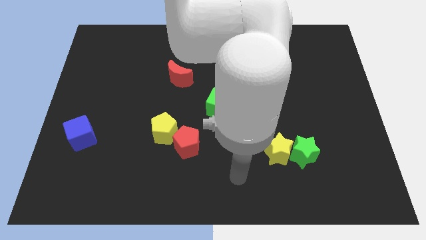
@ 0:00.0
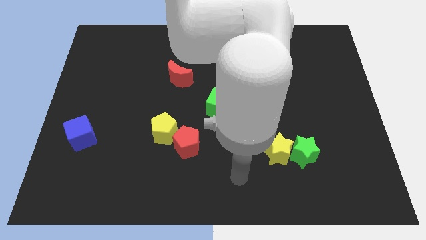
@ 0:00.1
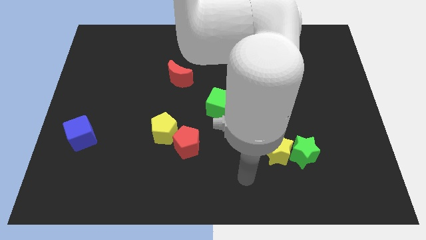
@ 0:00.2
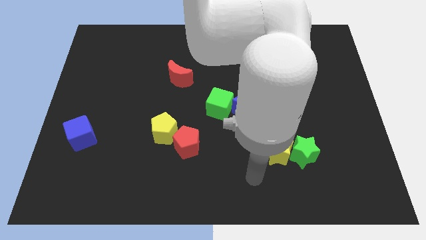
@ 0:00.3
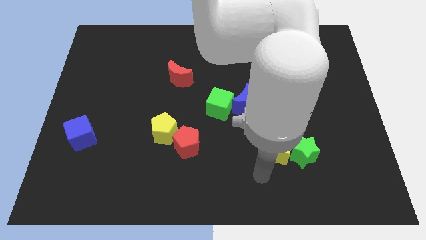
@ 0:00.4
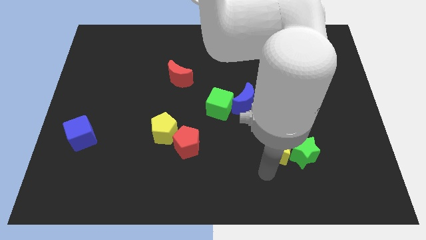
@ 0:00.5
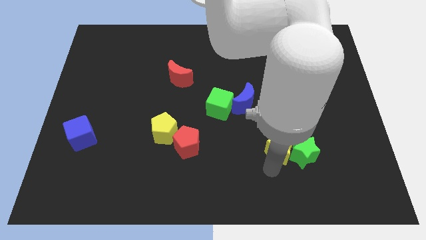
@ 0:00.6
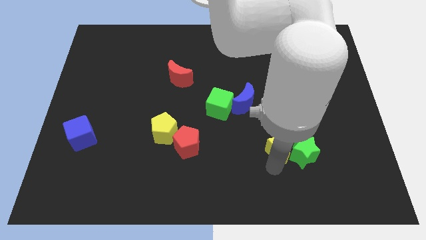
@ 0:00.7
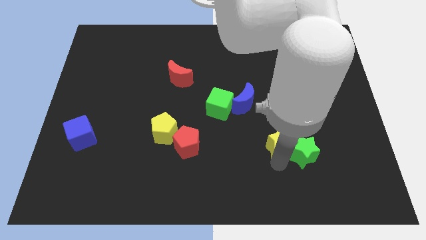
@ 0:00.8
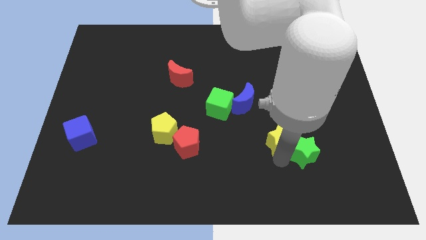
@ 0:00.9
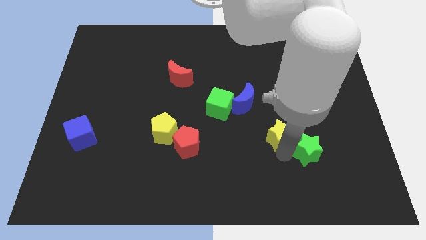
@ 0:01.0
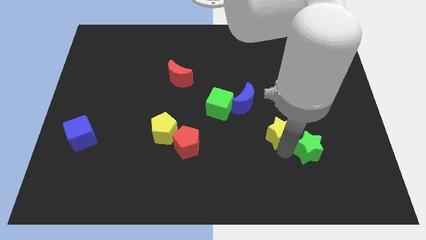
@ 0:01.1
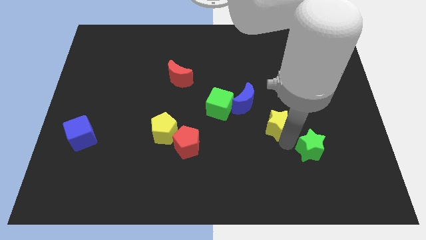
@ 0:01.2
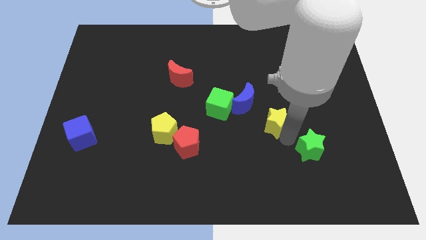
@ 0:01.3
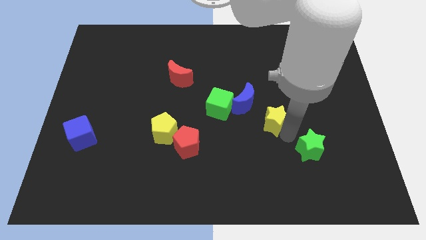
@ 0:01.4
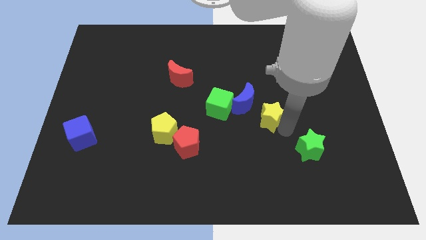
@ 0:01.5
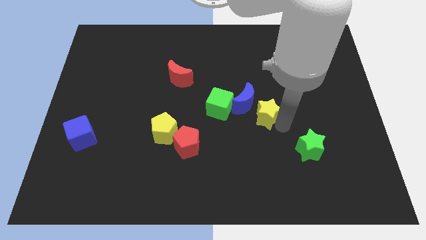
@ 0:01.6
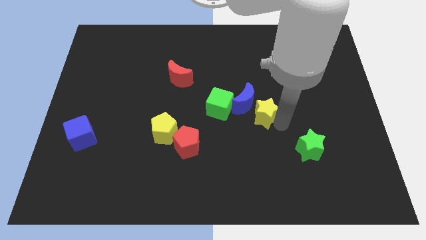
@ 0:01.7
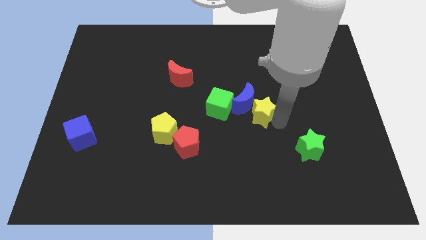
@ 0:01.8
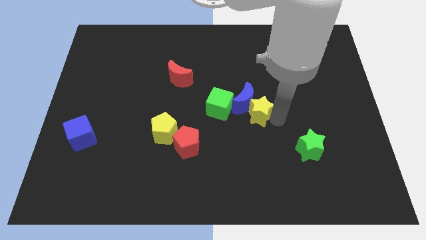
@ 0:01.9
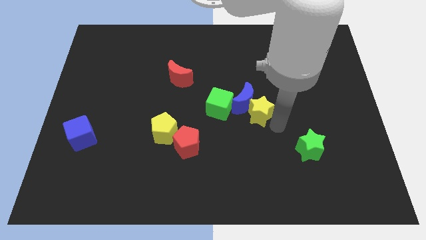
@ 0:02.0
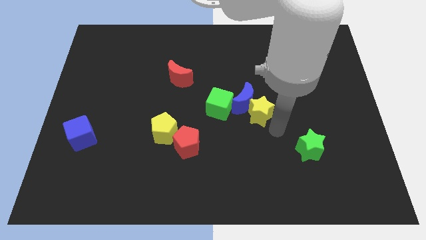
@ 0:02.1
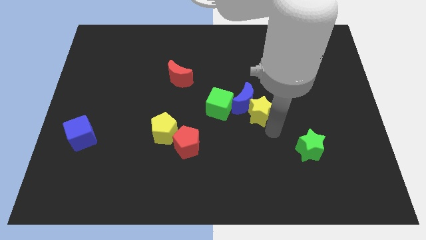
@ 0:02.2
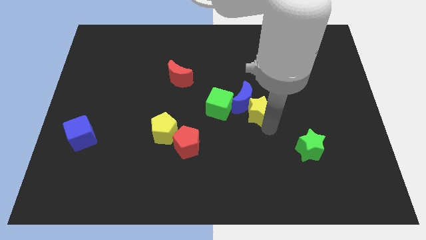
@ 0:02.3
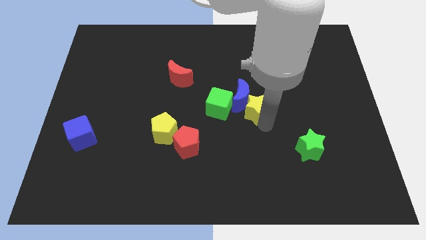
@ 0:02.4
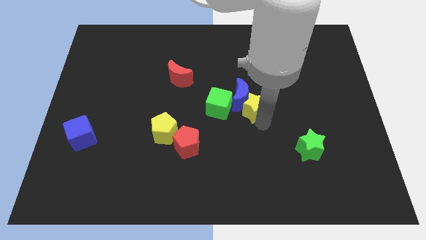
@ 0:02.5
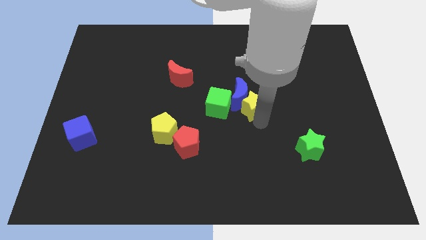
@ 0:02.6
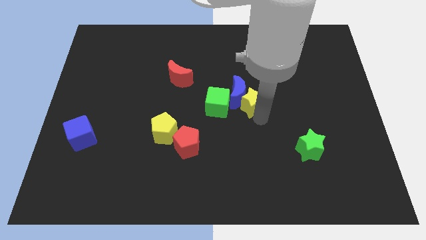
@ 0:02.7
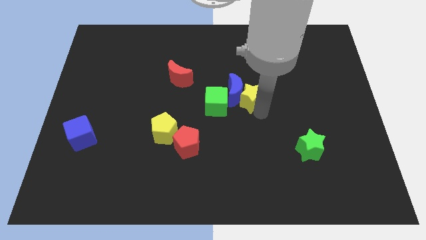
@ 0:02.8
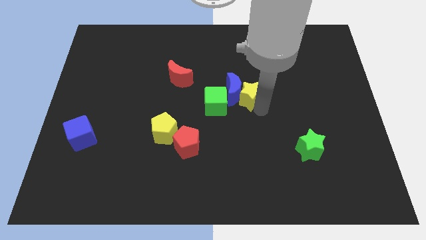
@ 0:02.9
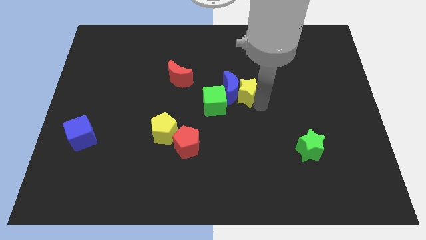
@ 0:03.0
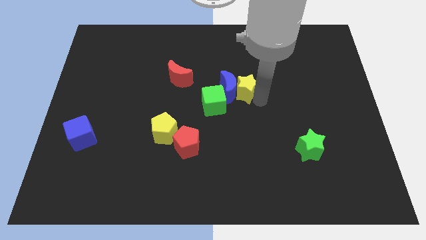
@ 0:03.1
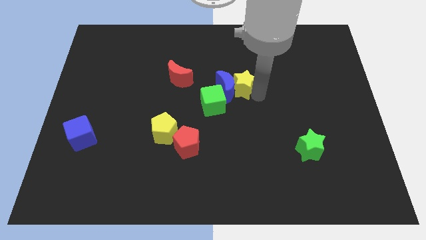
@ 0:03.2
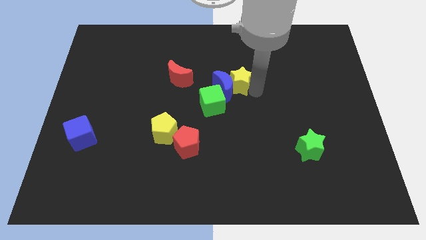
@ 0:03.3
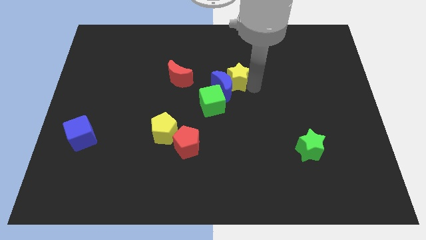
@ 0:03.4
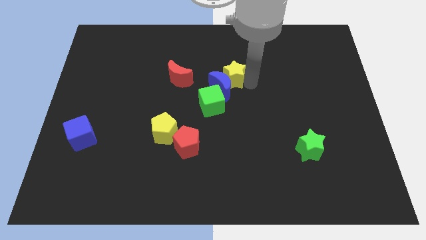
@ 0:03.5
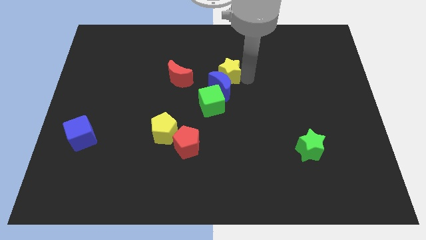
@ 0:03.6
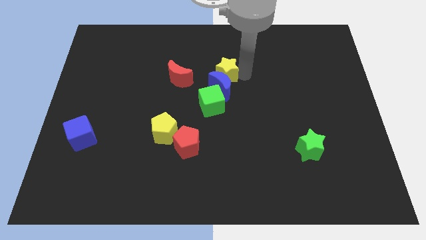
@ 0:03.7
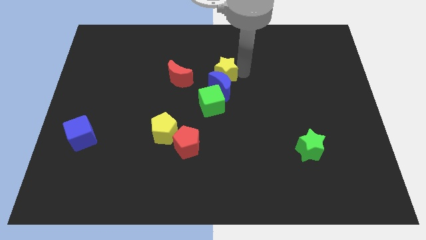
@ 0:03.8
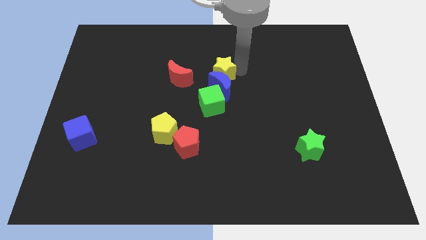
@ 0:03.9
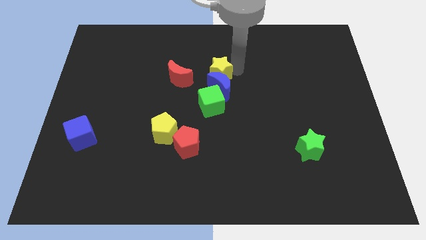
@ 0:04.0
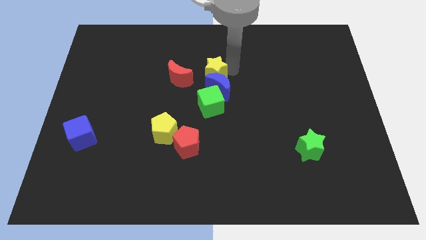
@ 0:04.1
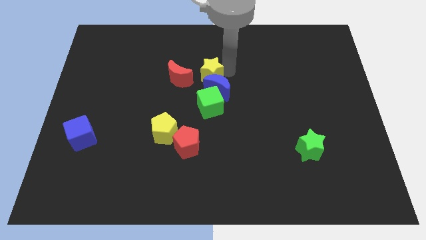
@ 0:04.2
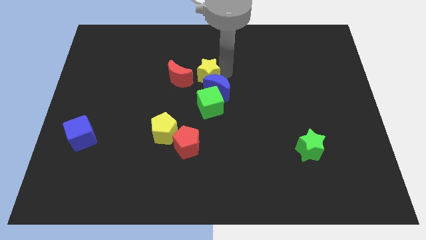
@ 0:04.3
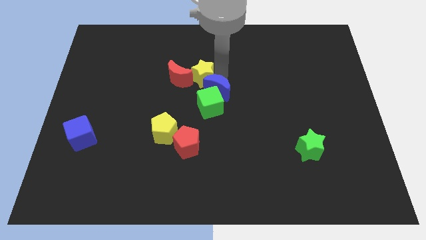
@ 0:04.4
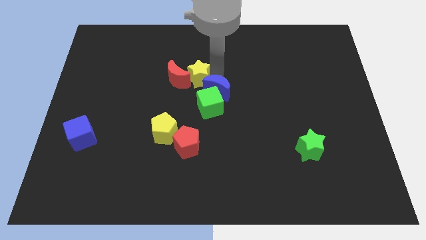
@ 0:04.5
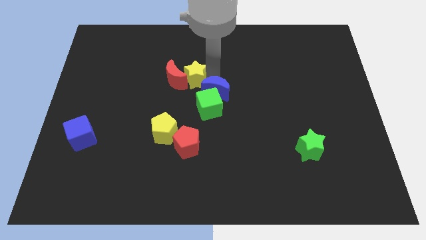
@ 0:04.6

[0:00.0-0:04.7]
put the yellow star to the red moon

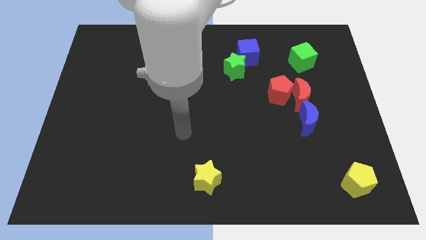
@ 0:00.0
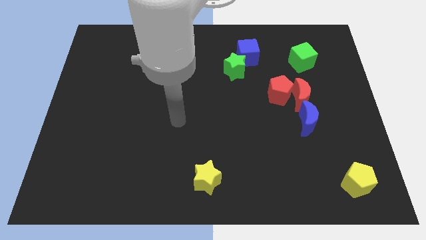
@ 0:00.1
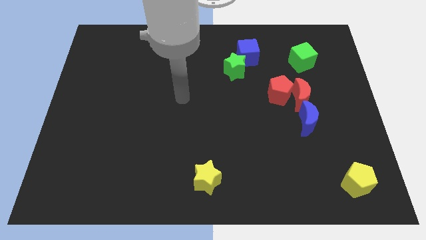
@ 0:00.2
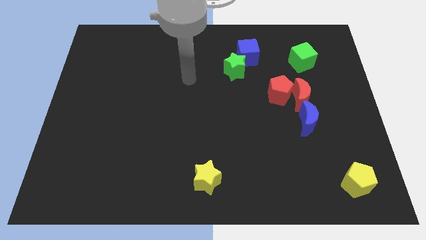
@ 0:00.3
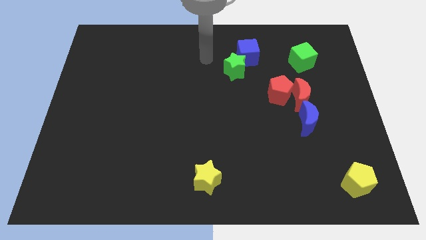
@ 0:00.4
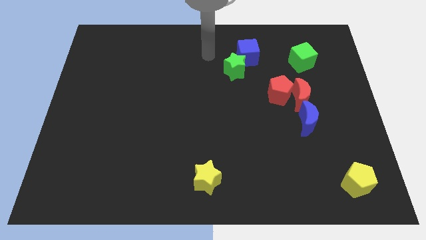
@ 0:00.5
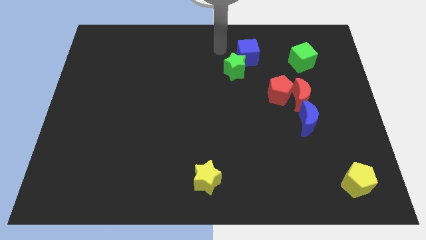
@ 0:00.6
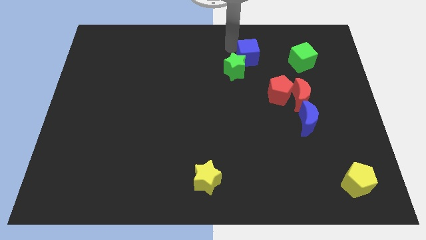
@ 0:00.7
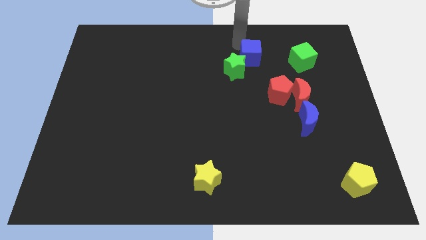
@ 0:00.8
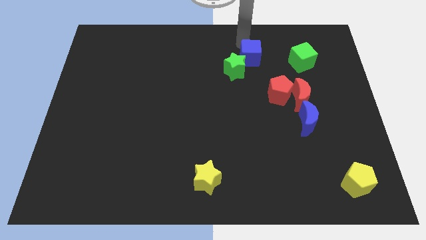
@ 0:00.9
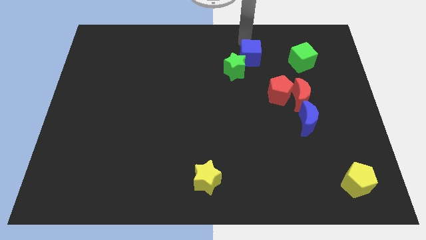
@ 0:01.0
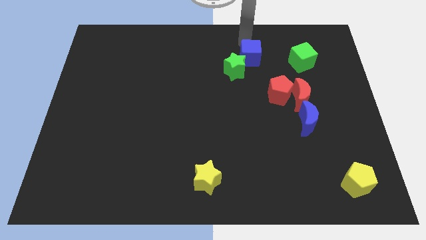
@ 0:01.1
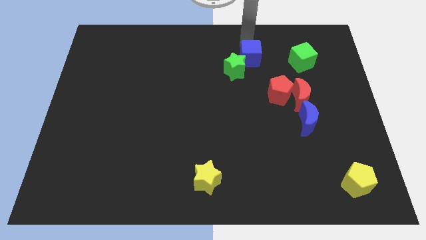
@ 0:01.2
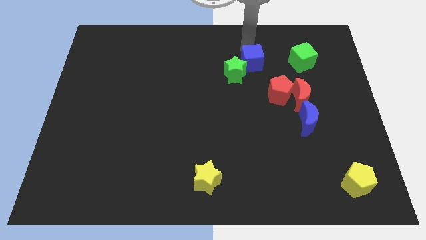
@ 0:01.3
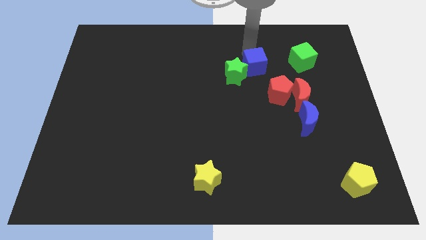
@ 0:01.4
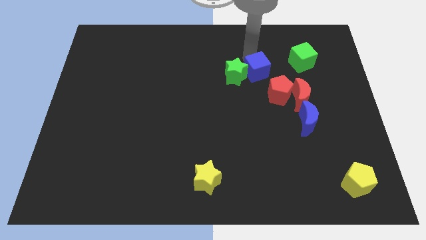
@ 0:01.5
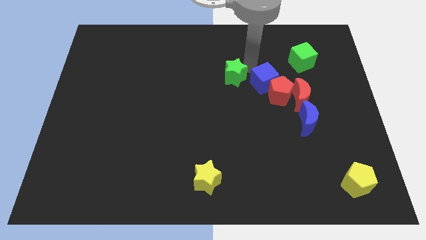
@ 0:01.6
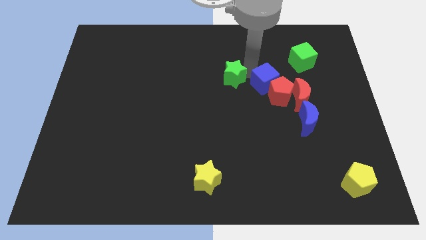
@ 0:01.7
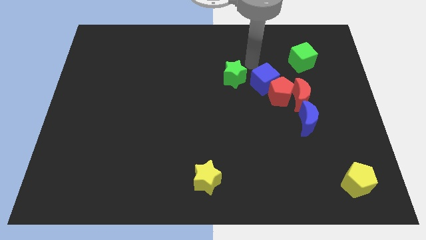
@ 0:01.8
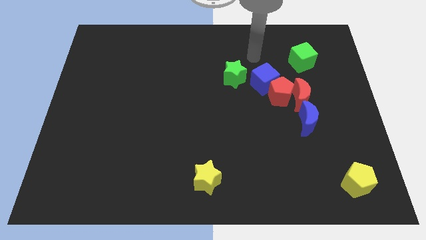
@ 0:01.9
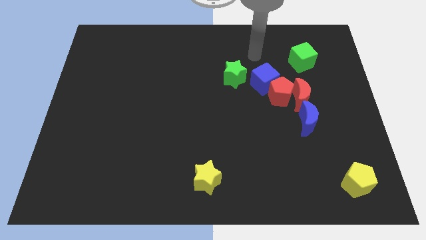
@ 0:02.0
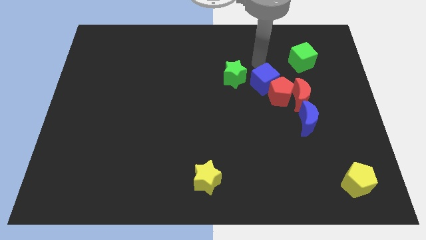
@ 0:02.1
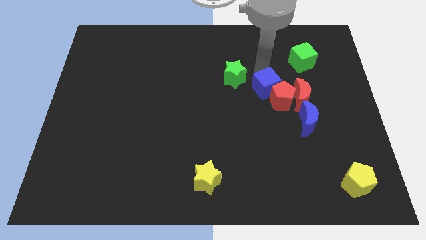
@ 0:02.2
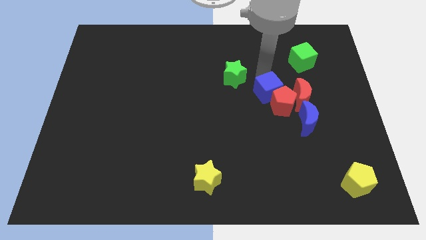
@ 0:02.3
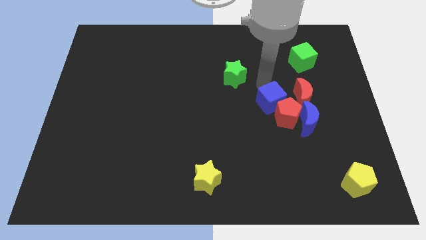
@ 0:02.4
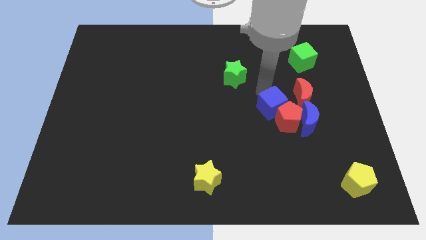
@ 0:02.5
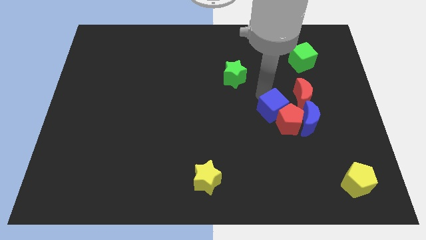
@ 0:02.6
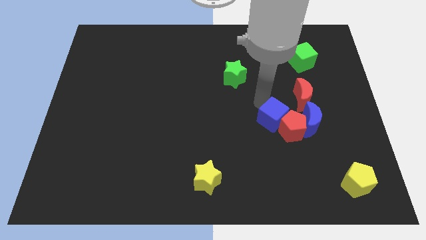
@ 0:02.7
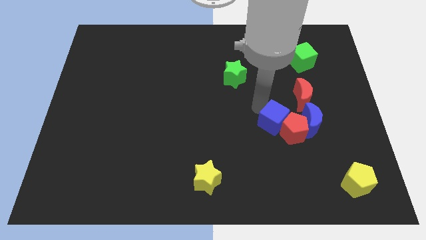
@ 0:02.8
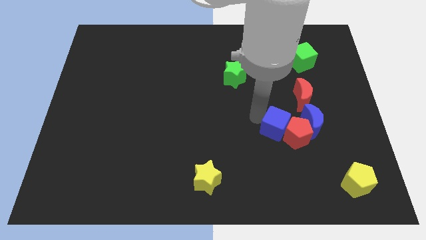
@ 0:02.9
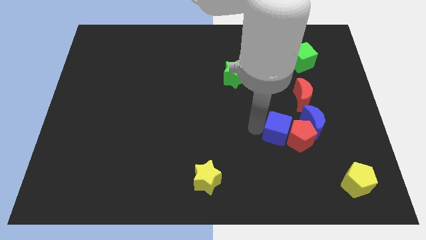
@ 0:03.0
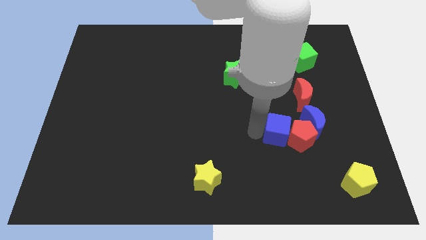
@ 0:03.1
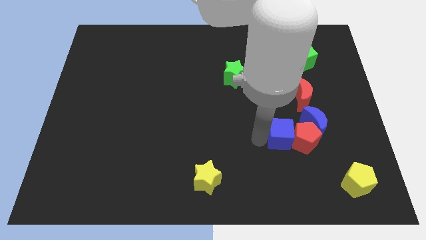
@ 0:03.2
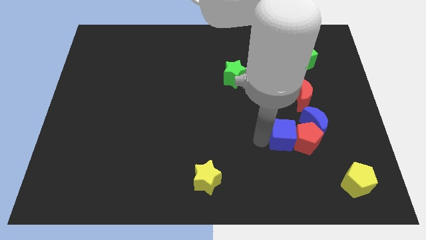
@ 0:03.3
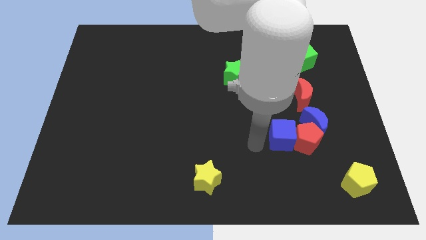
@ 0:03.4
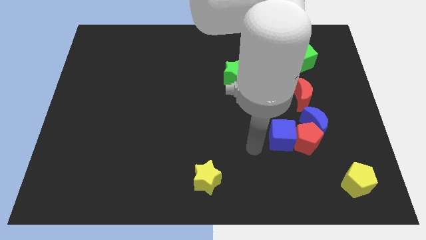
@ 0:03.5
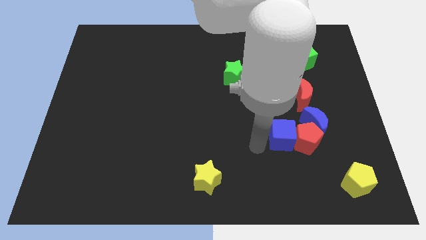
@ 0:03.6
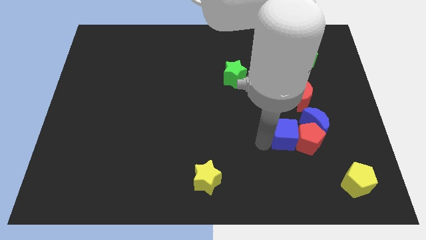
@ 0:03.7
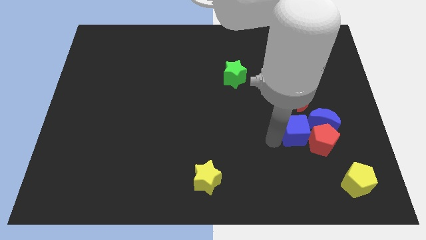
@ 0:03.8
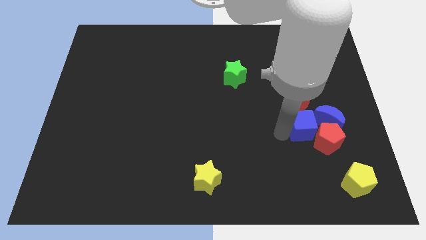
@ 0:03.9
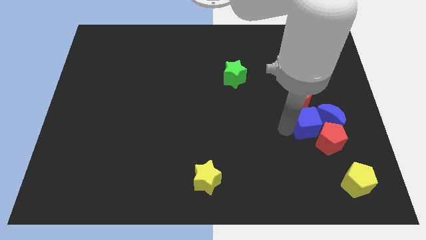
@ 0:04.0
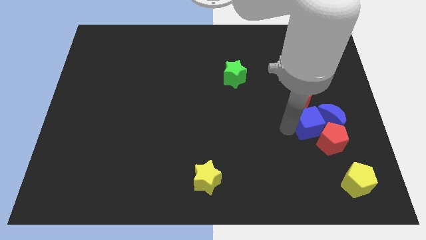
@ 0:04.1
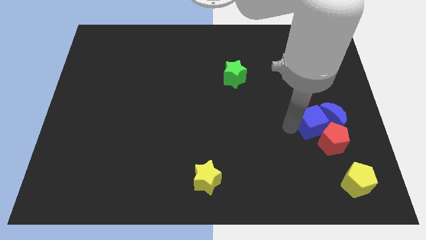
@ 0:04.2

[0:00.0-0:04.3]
move the blue cube next to the blue moon
